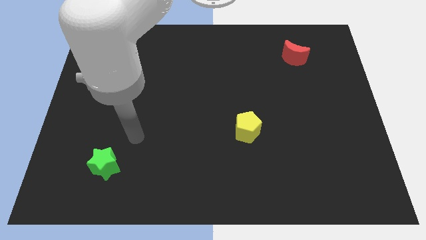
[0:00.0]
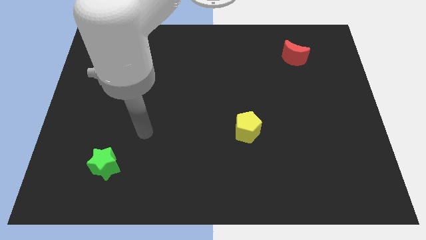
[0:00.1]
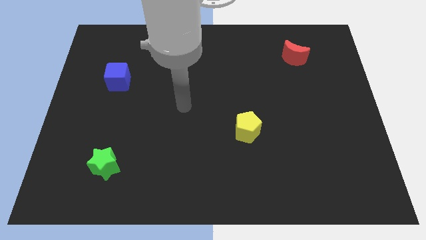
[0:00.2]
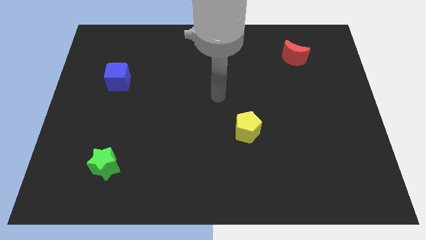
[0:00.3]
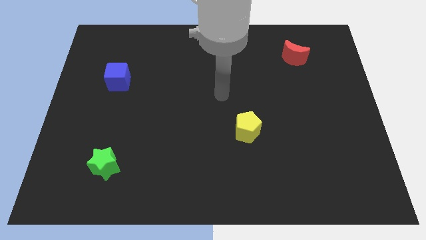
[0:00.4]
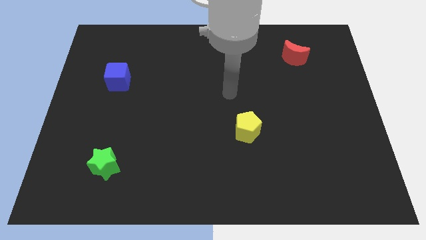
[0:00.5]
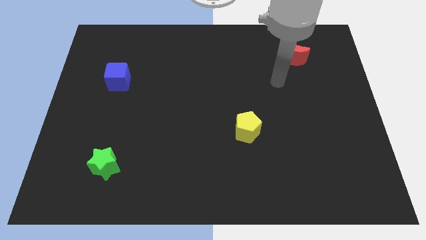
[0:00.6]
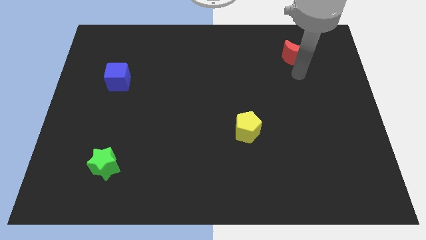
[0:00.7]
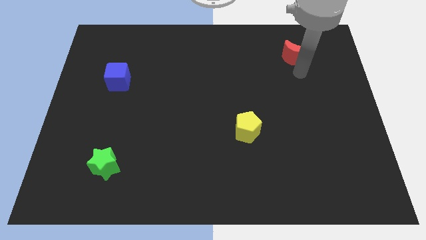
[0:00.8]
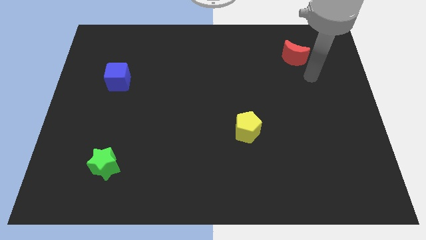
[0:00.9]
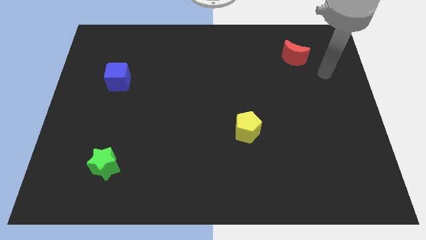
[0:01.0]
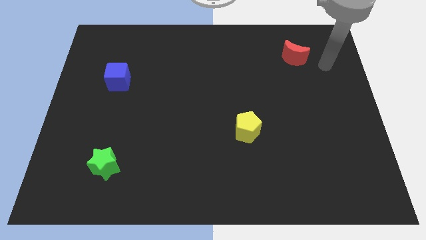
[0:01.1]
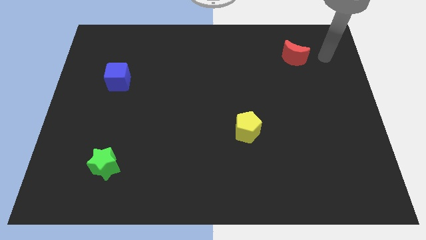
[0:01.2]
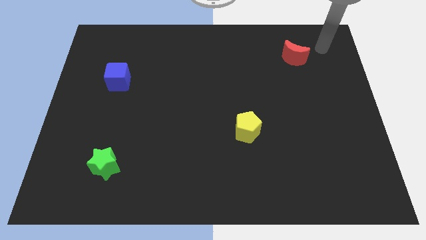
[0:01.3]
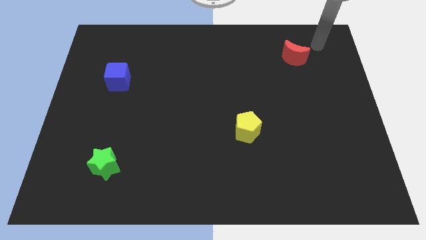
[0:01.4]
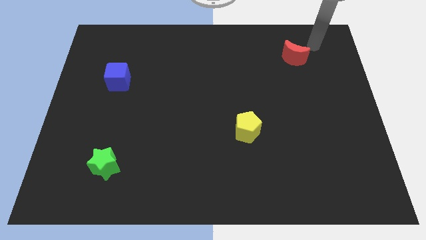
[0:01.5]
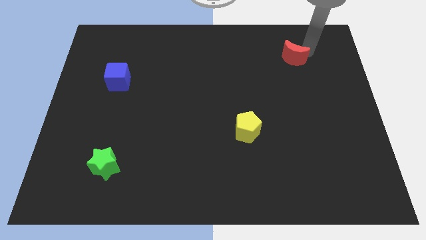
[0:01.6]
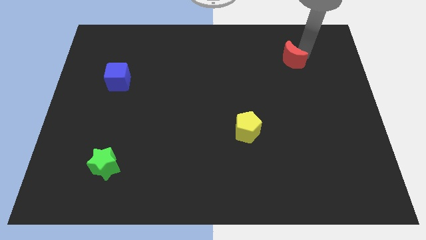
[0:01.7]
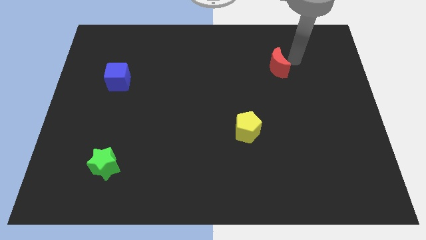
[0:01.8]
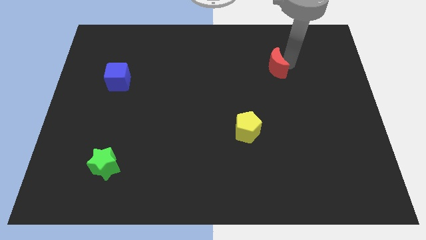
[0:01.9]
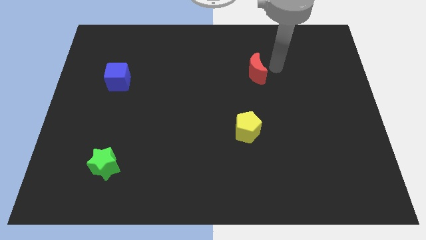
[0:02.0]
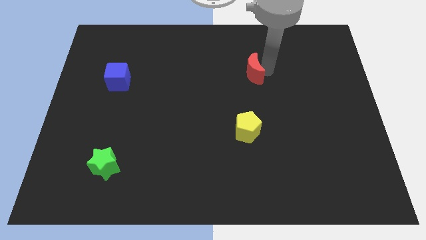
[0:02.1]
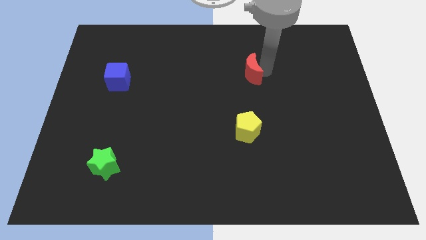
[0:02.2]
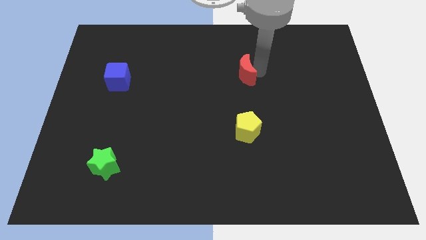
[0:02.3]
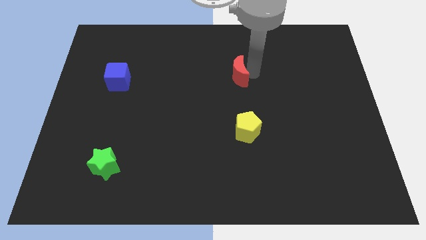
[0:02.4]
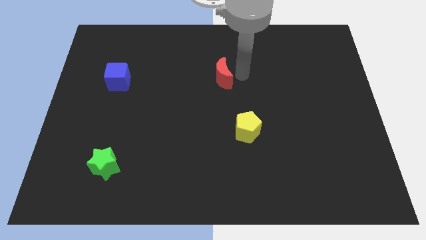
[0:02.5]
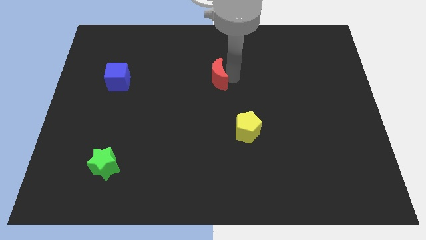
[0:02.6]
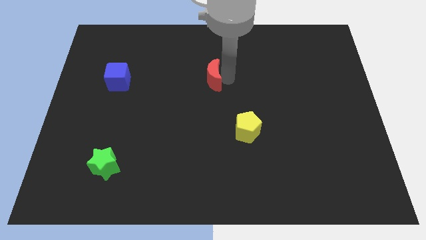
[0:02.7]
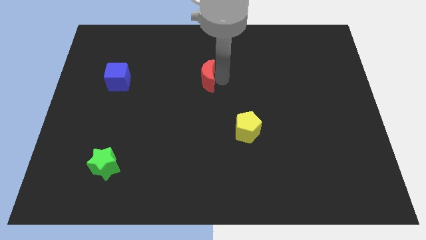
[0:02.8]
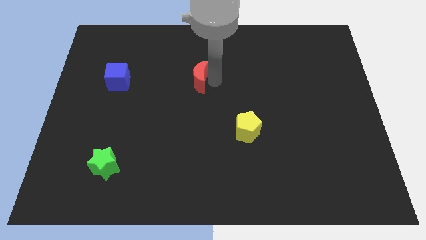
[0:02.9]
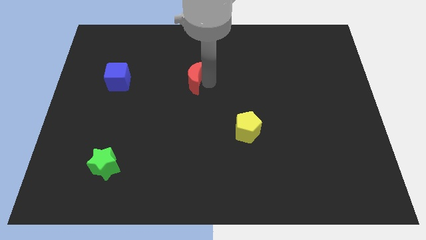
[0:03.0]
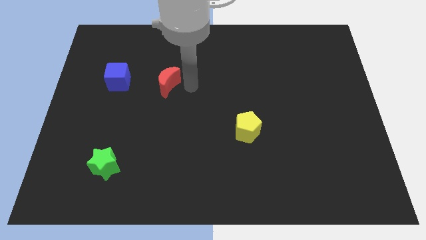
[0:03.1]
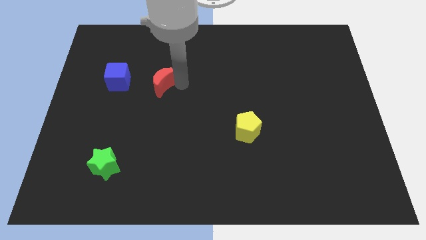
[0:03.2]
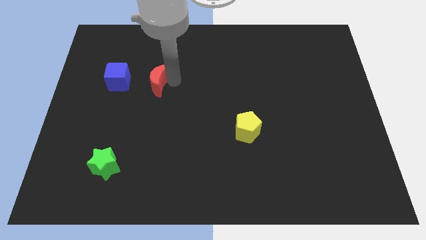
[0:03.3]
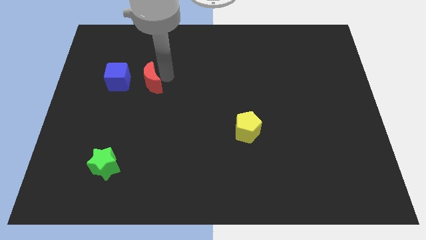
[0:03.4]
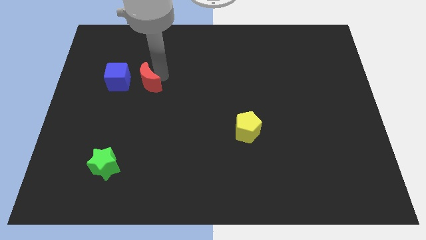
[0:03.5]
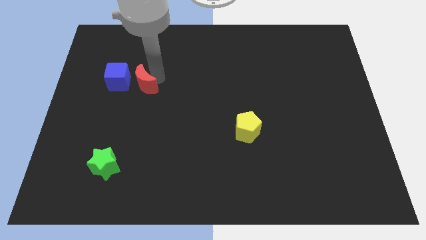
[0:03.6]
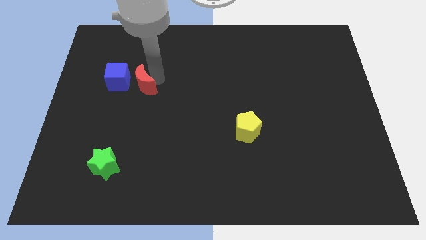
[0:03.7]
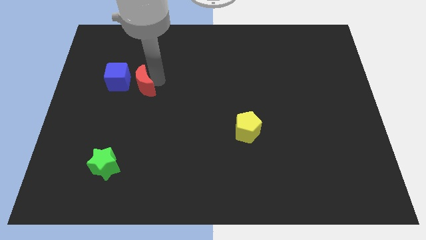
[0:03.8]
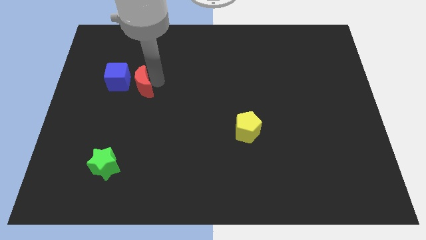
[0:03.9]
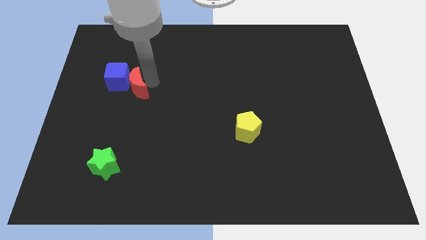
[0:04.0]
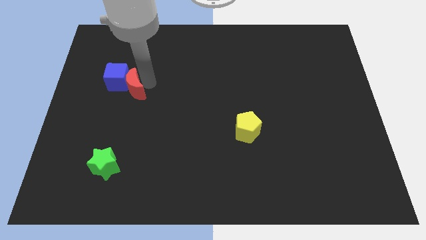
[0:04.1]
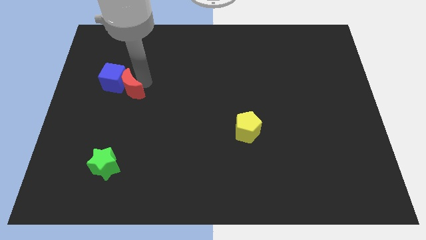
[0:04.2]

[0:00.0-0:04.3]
slide the red block next to the cube

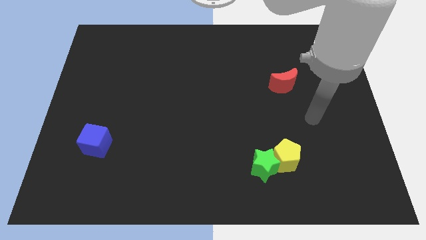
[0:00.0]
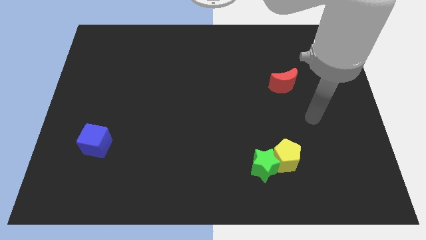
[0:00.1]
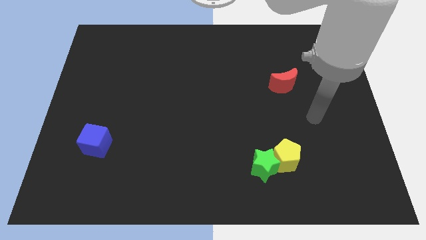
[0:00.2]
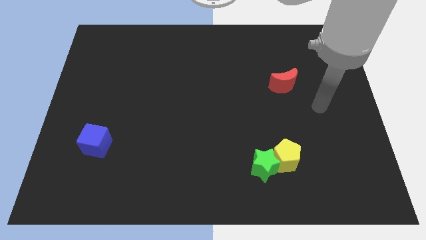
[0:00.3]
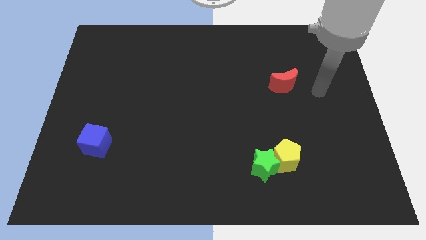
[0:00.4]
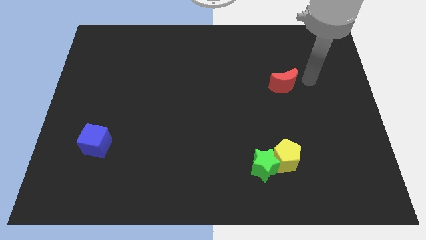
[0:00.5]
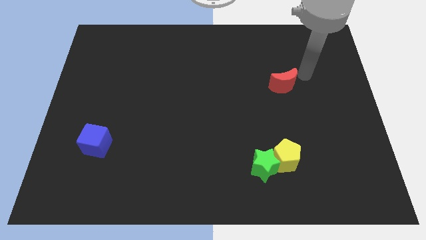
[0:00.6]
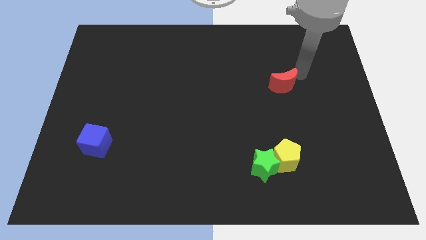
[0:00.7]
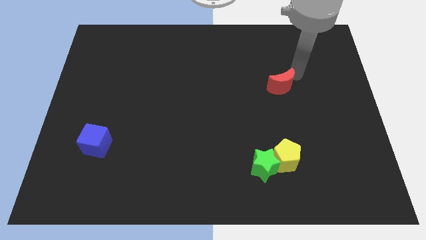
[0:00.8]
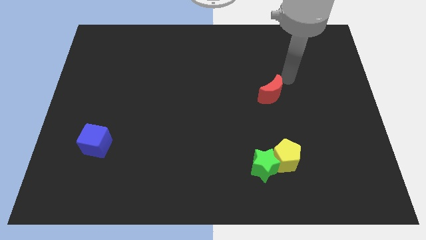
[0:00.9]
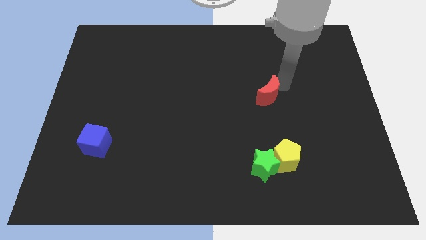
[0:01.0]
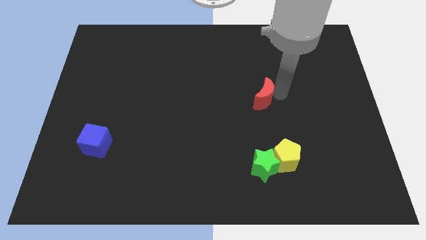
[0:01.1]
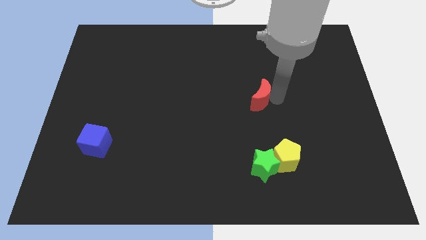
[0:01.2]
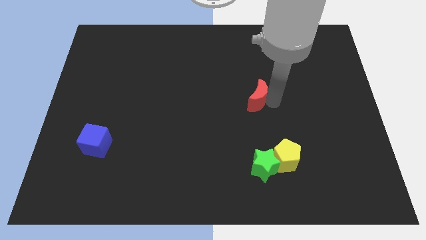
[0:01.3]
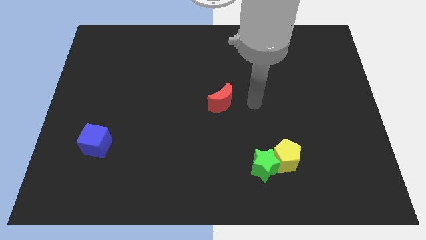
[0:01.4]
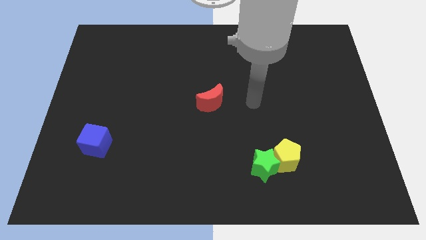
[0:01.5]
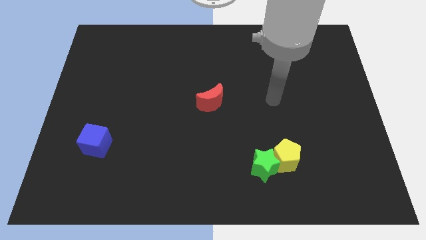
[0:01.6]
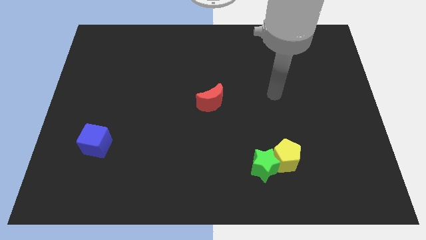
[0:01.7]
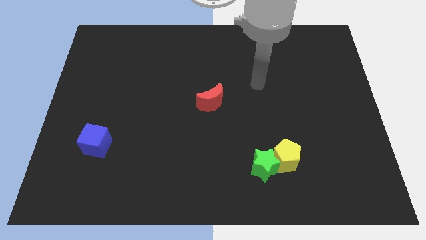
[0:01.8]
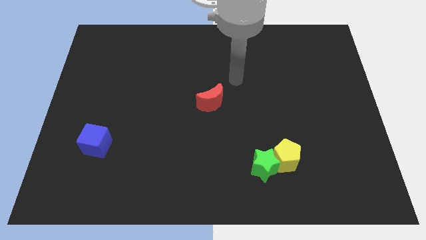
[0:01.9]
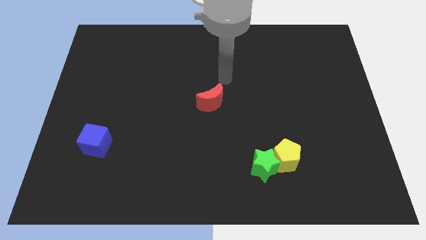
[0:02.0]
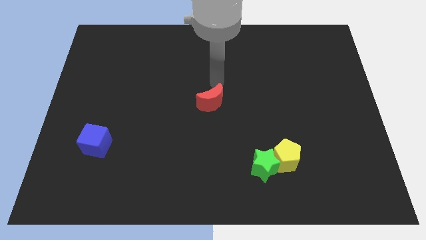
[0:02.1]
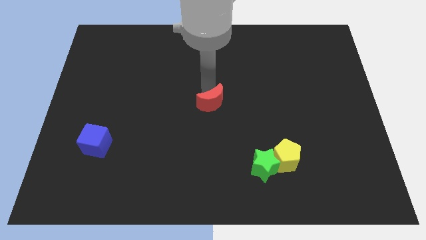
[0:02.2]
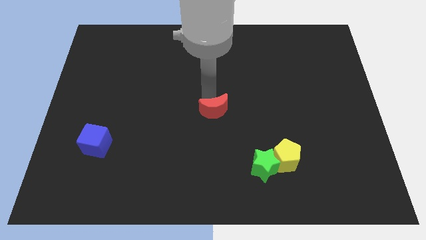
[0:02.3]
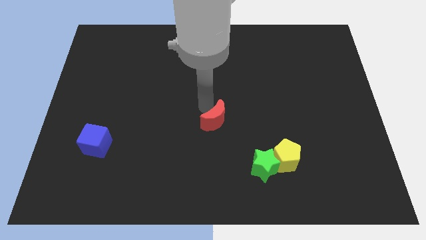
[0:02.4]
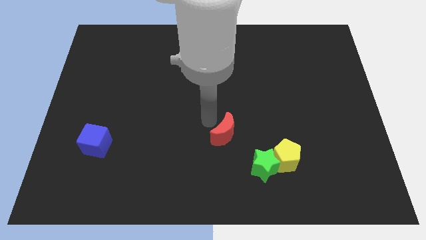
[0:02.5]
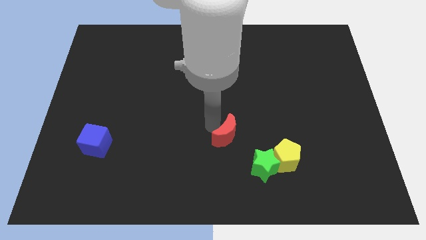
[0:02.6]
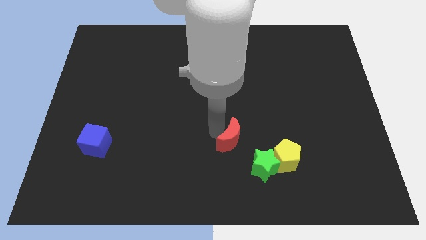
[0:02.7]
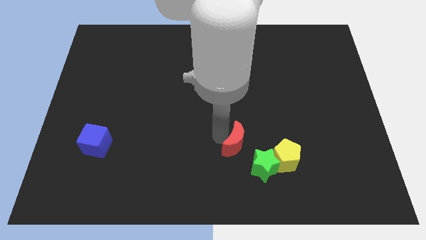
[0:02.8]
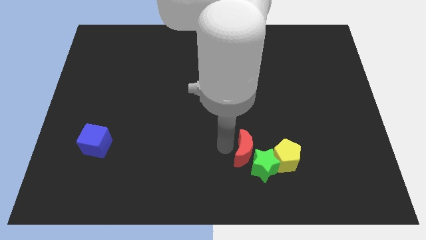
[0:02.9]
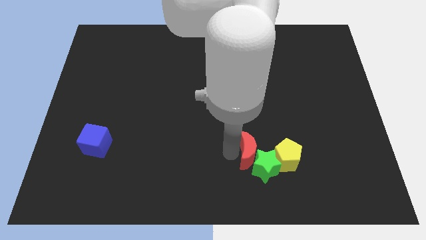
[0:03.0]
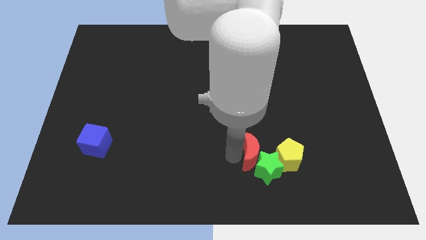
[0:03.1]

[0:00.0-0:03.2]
move the moon to the star

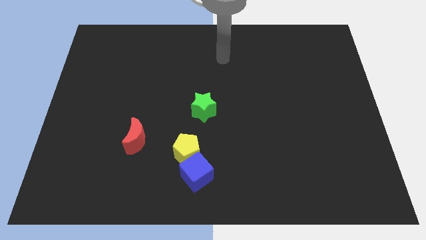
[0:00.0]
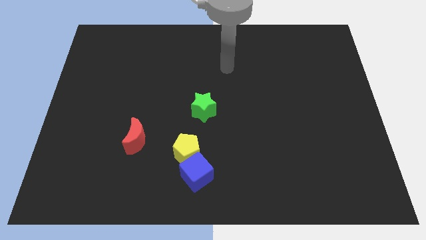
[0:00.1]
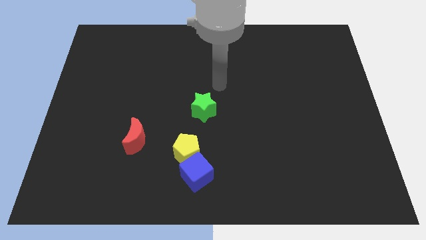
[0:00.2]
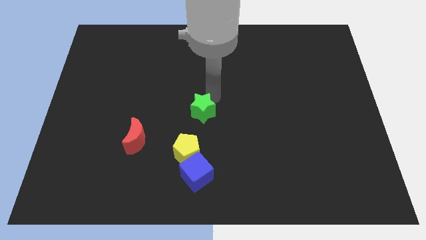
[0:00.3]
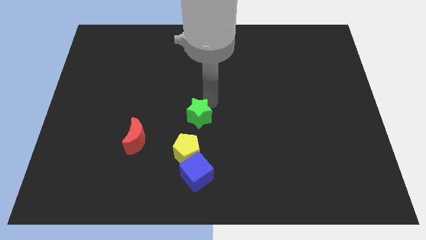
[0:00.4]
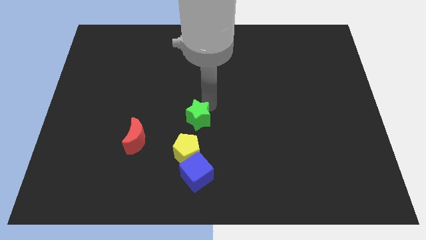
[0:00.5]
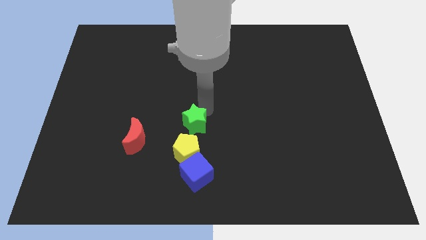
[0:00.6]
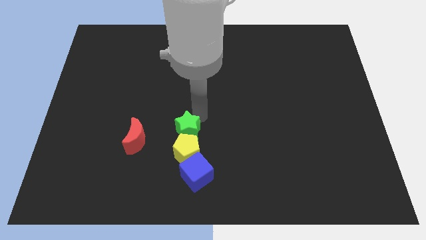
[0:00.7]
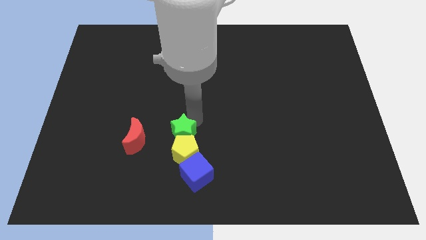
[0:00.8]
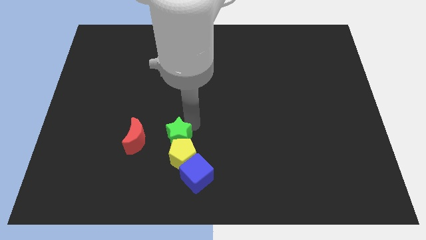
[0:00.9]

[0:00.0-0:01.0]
push the green star towards the pentagon

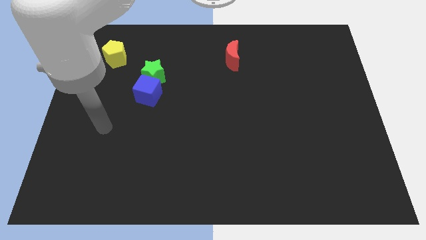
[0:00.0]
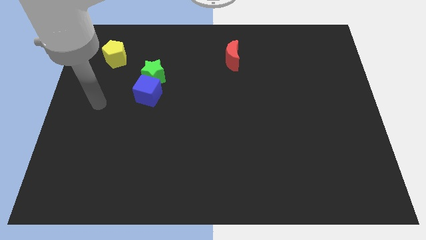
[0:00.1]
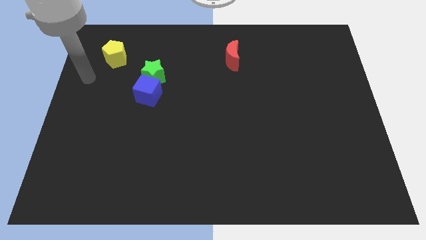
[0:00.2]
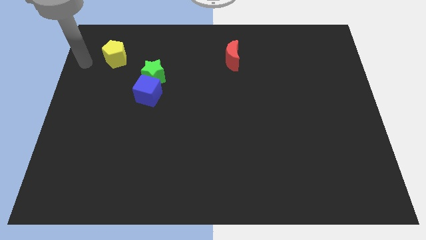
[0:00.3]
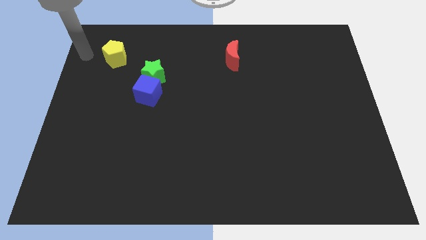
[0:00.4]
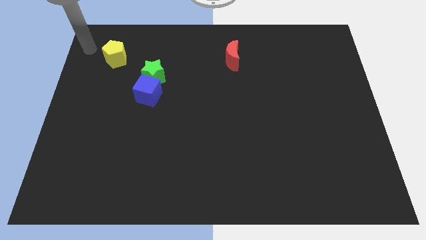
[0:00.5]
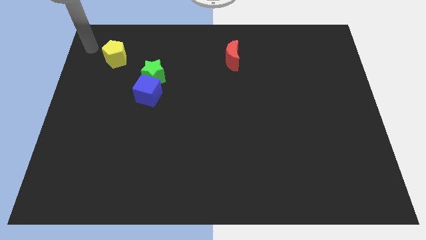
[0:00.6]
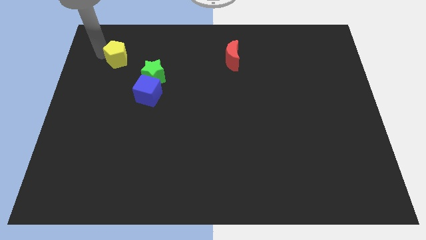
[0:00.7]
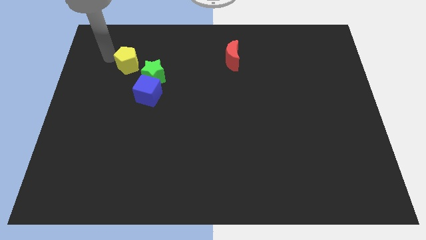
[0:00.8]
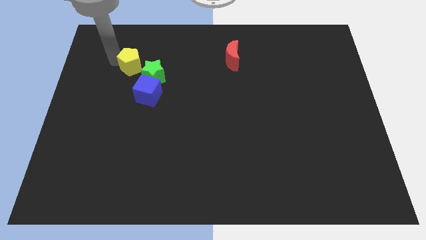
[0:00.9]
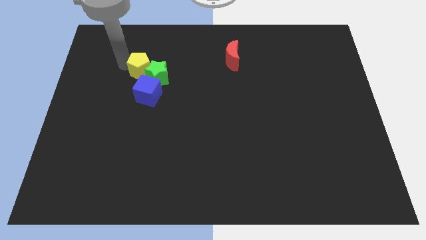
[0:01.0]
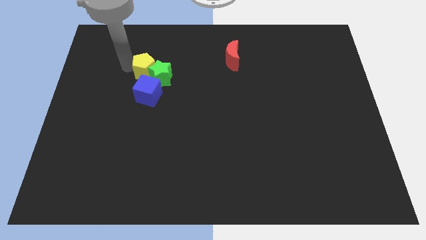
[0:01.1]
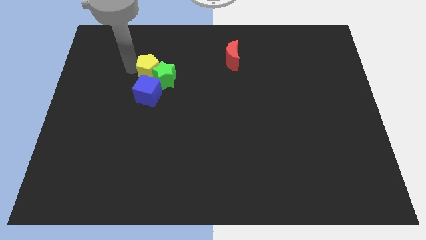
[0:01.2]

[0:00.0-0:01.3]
move the yellow pentagon next to the star
